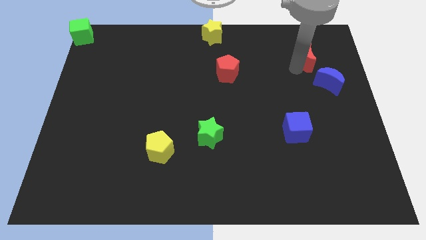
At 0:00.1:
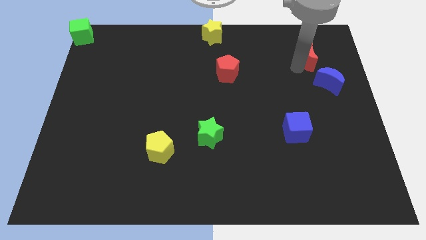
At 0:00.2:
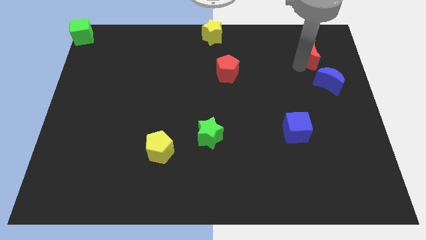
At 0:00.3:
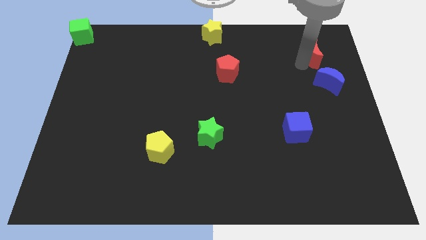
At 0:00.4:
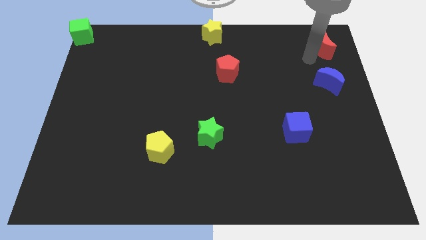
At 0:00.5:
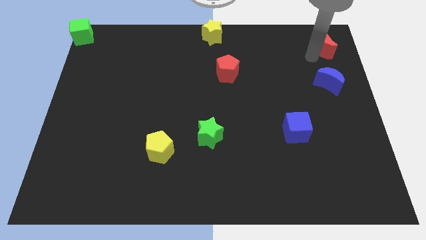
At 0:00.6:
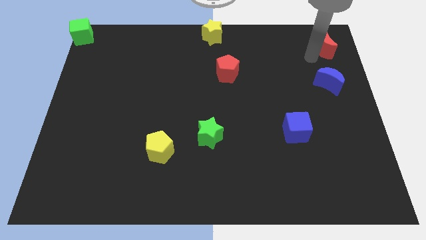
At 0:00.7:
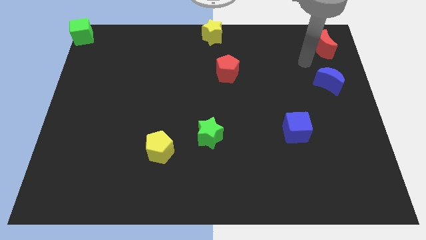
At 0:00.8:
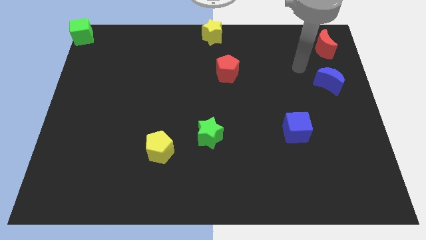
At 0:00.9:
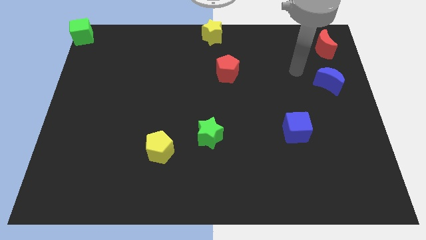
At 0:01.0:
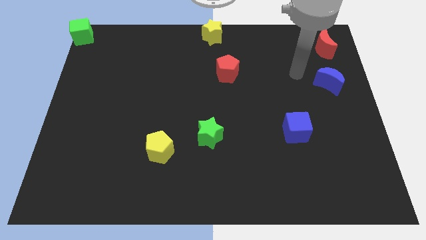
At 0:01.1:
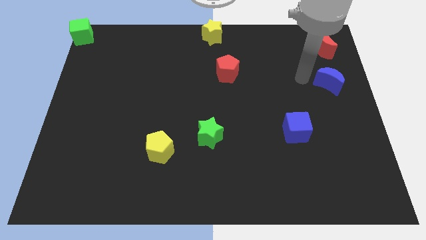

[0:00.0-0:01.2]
move red crescent towards the top right corner of the board

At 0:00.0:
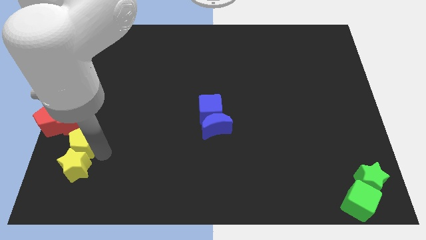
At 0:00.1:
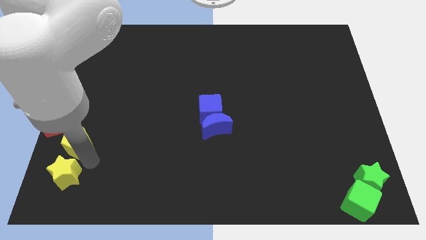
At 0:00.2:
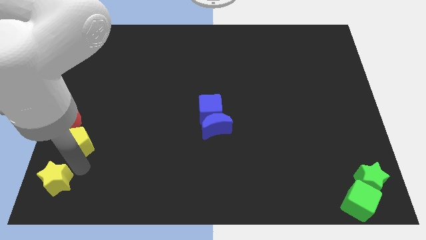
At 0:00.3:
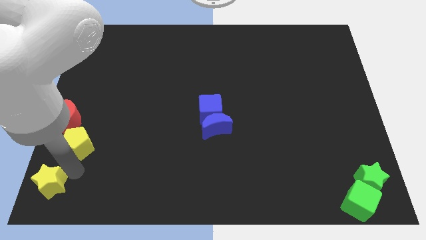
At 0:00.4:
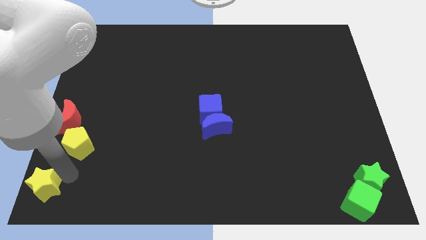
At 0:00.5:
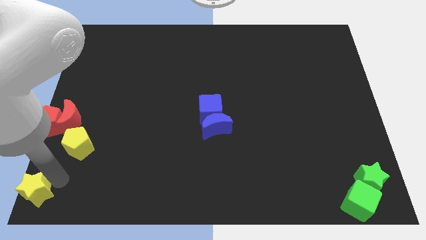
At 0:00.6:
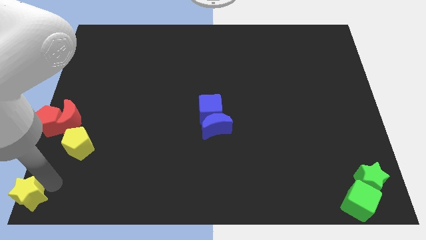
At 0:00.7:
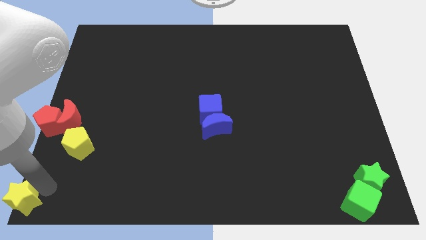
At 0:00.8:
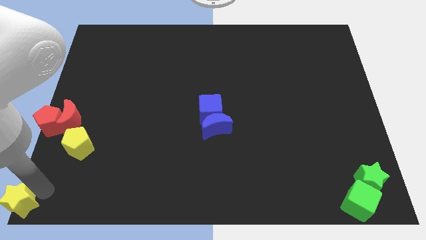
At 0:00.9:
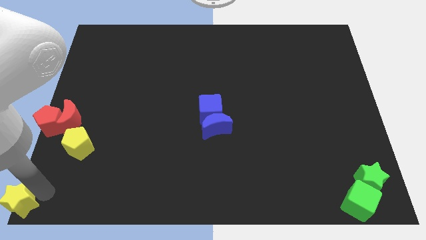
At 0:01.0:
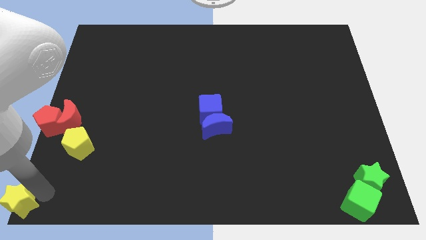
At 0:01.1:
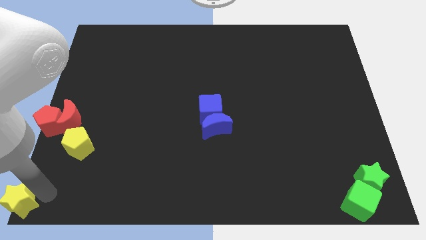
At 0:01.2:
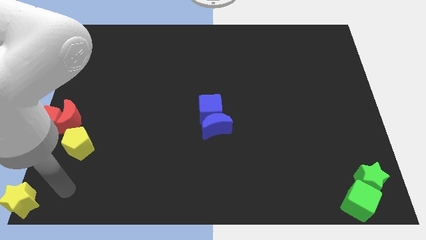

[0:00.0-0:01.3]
move the yellow star towards the bottom left of the board

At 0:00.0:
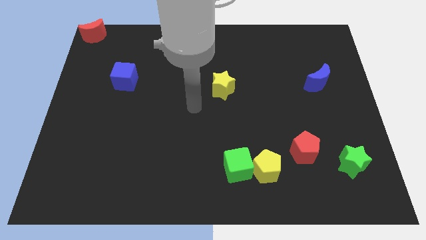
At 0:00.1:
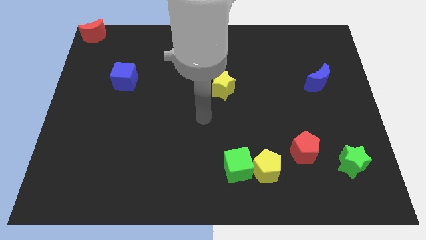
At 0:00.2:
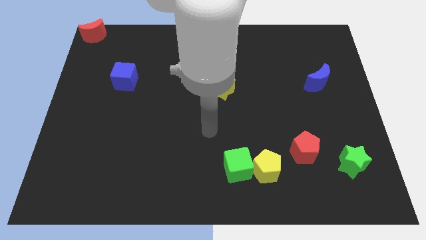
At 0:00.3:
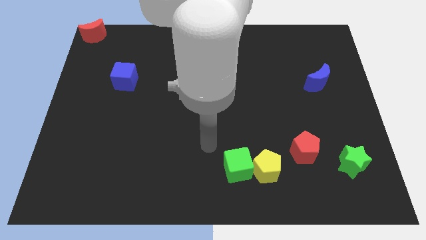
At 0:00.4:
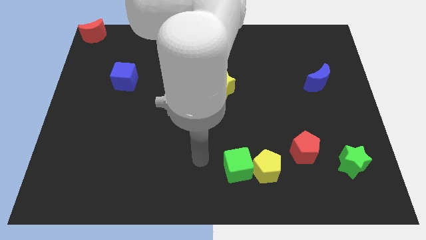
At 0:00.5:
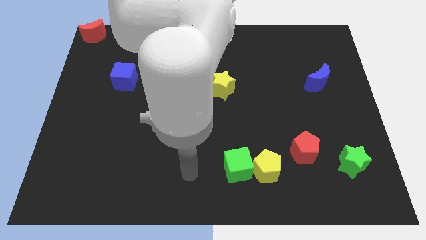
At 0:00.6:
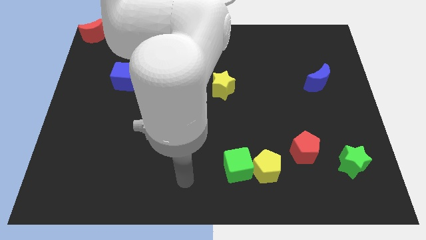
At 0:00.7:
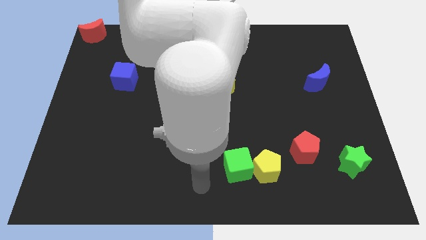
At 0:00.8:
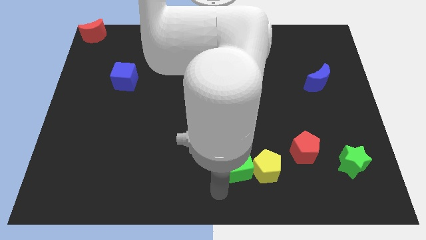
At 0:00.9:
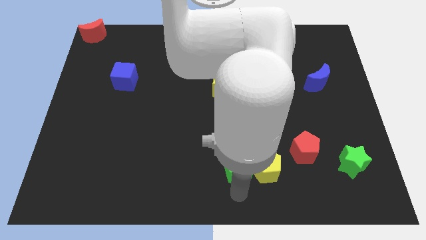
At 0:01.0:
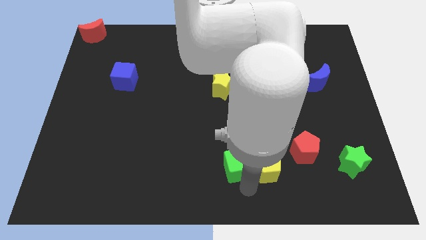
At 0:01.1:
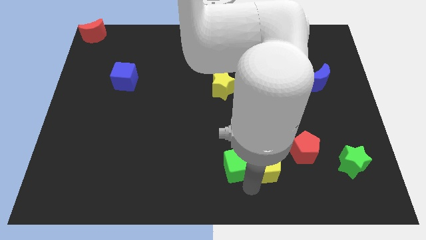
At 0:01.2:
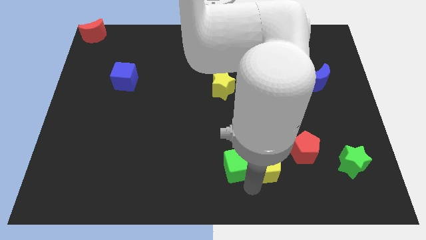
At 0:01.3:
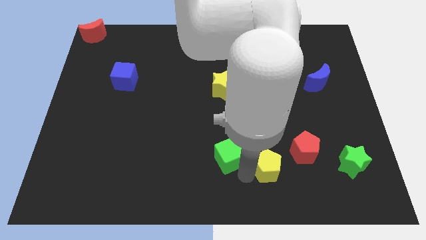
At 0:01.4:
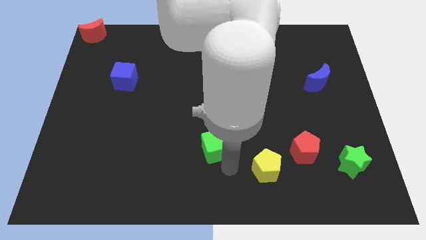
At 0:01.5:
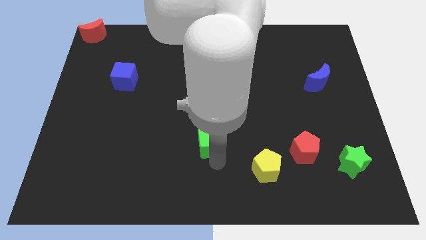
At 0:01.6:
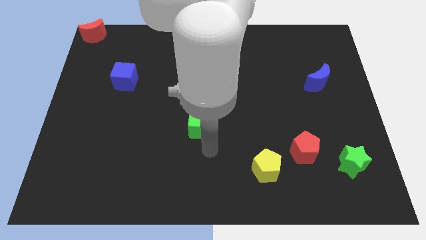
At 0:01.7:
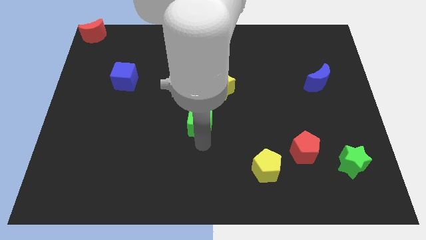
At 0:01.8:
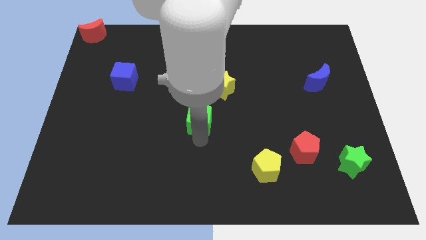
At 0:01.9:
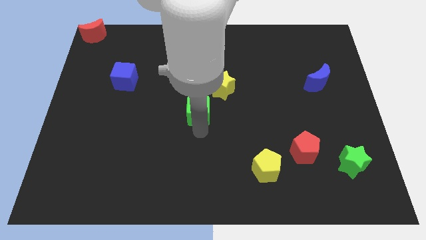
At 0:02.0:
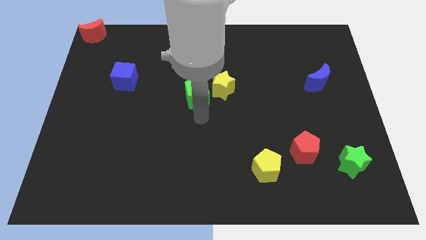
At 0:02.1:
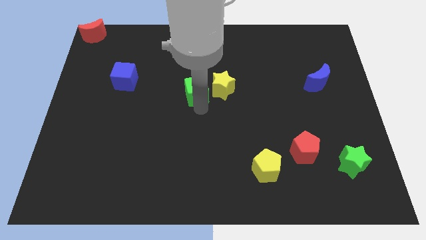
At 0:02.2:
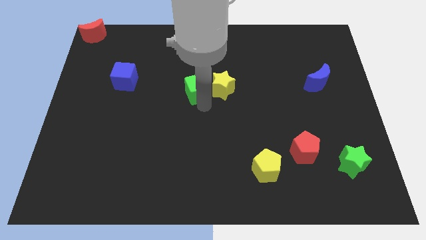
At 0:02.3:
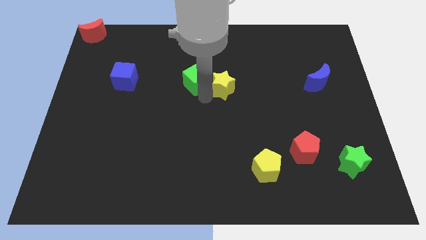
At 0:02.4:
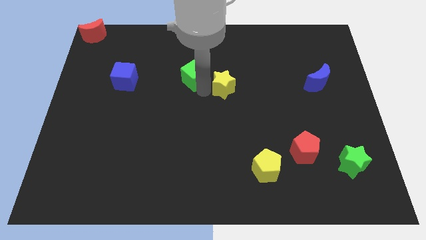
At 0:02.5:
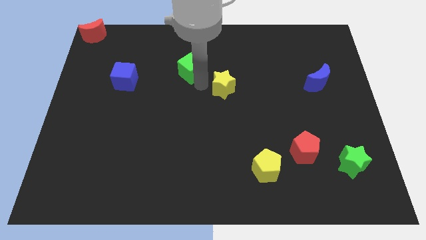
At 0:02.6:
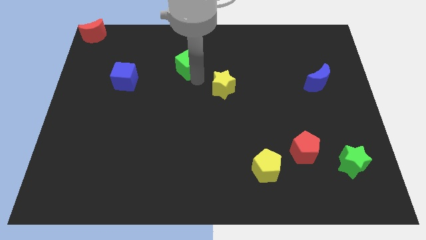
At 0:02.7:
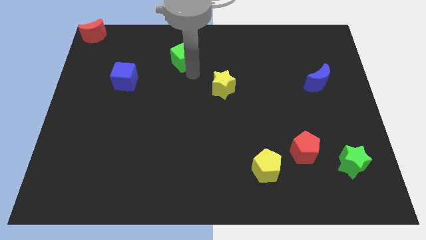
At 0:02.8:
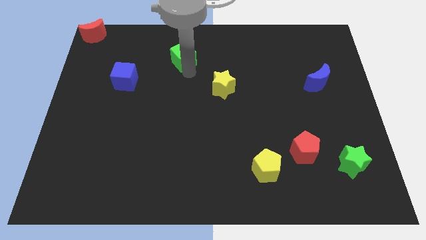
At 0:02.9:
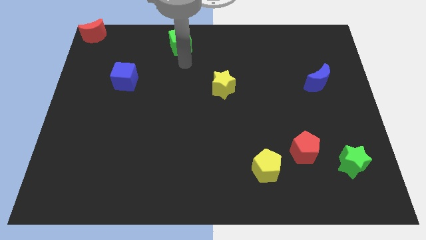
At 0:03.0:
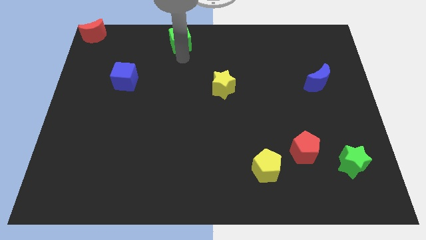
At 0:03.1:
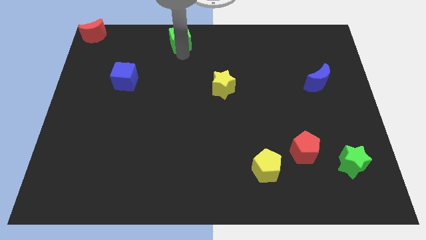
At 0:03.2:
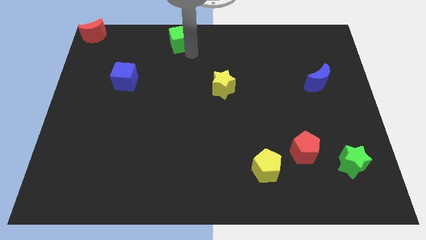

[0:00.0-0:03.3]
push the green cube towards the top

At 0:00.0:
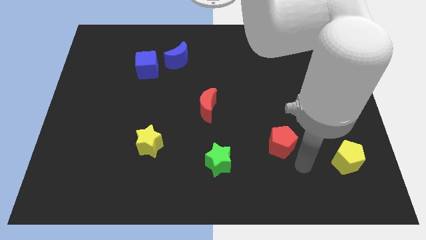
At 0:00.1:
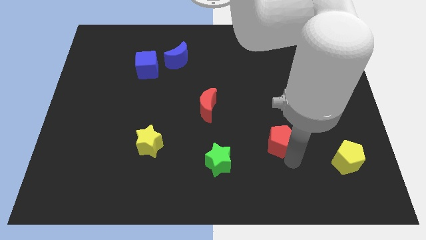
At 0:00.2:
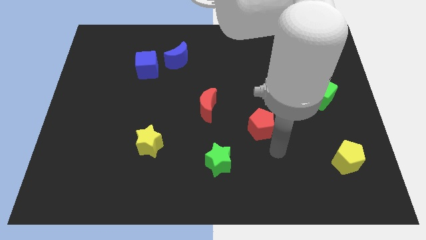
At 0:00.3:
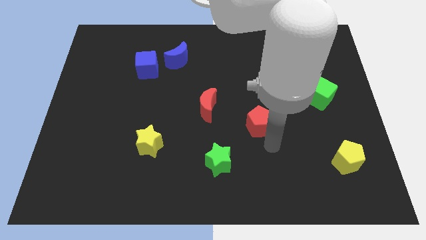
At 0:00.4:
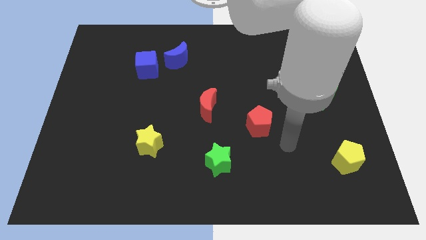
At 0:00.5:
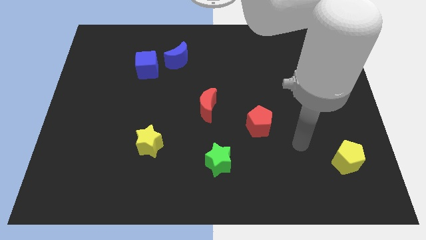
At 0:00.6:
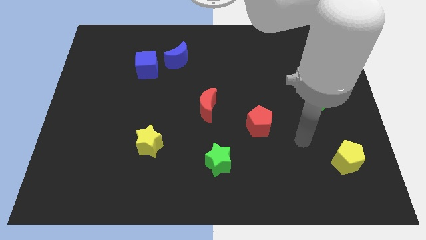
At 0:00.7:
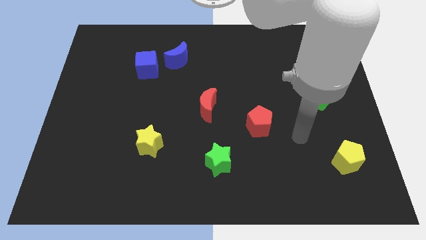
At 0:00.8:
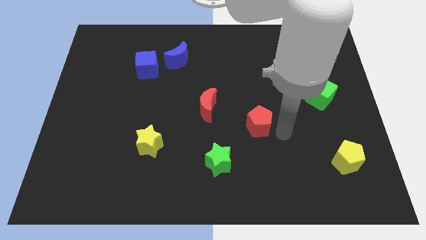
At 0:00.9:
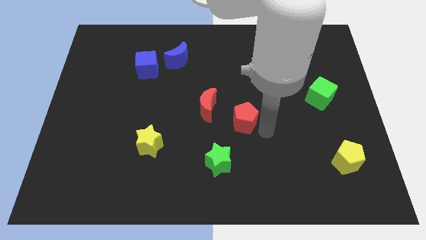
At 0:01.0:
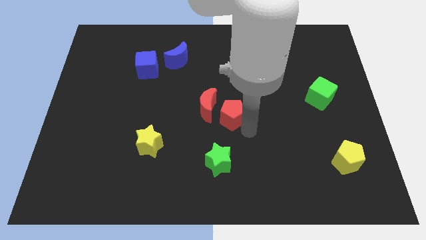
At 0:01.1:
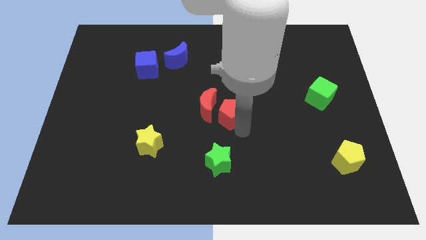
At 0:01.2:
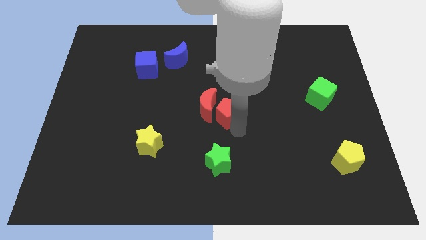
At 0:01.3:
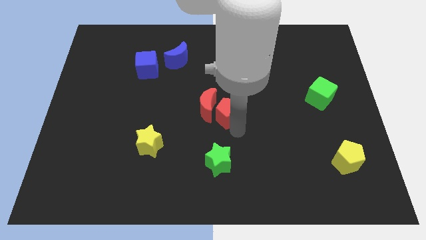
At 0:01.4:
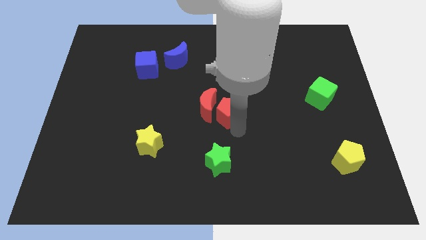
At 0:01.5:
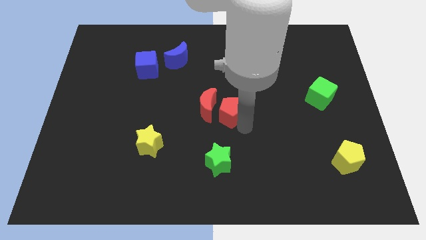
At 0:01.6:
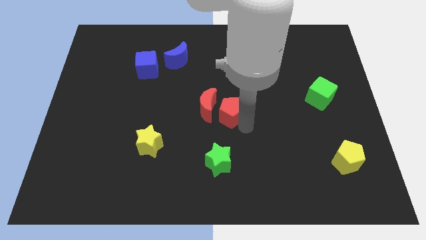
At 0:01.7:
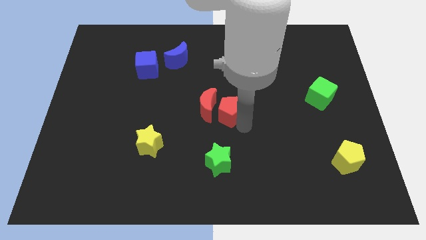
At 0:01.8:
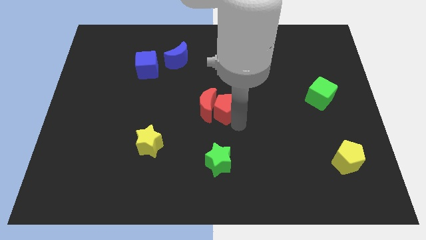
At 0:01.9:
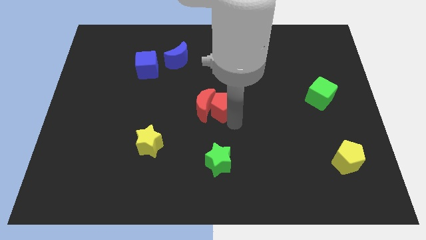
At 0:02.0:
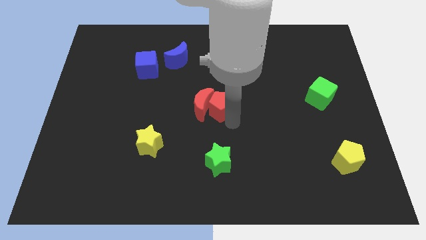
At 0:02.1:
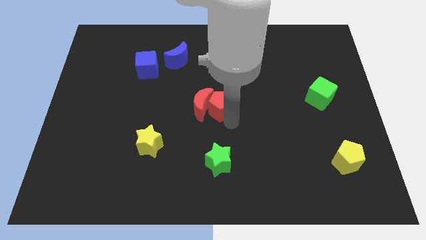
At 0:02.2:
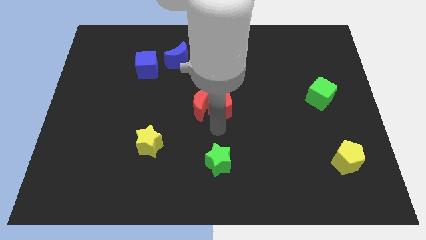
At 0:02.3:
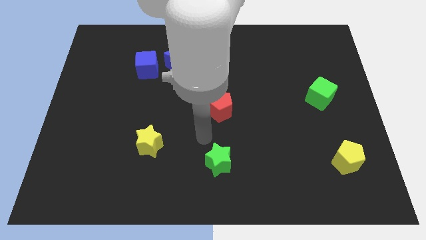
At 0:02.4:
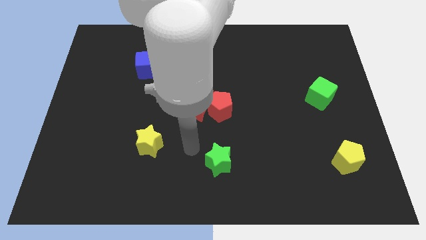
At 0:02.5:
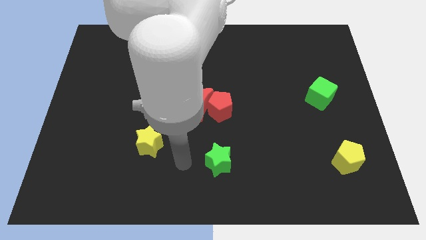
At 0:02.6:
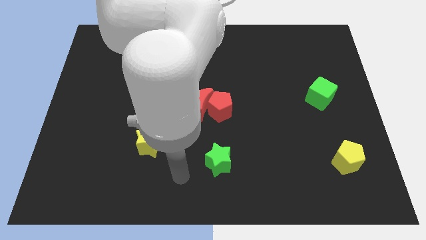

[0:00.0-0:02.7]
place red pentagon into the red moon

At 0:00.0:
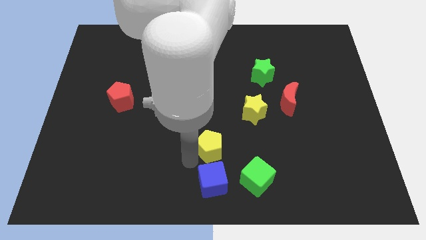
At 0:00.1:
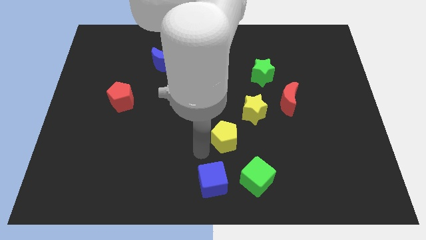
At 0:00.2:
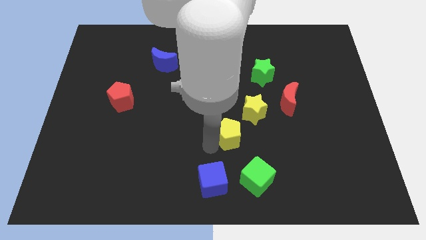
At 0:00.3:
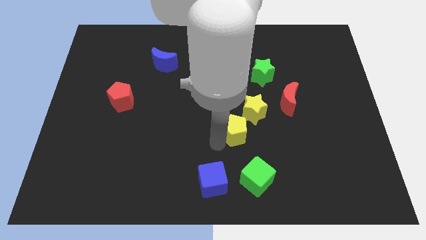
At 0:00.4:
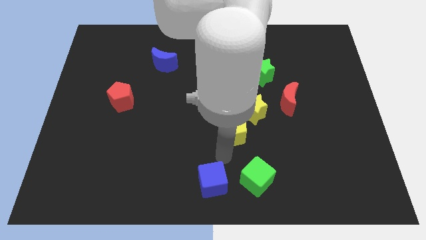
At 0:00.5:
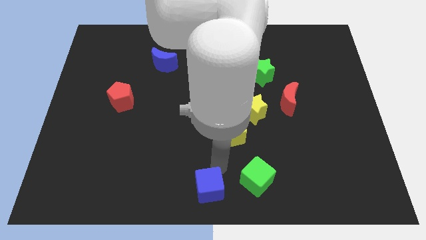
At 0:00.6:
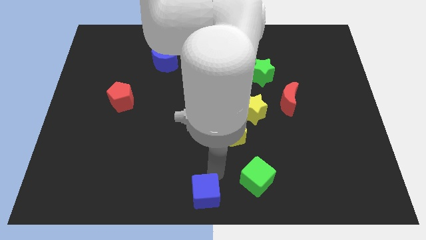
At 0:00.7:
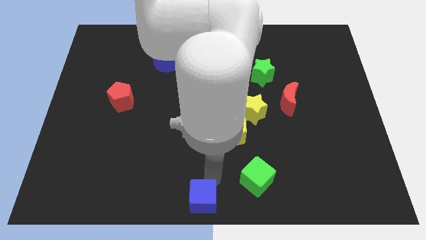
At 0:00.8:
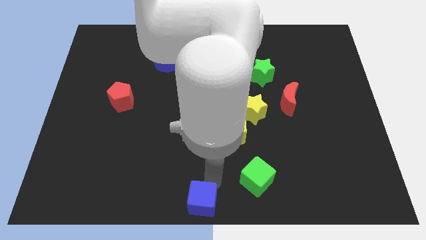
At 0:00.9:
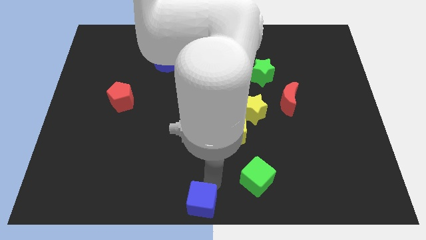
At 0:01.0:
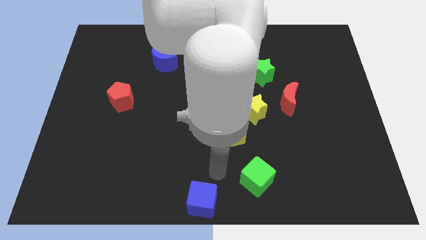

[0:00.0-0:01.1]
separate the blue cube and the yellow pentagon
